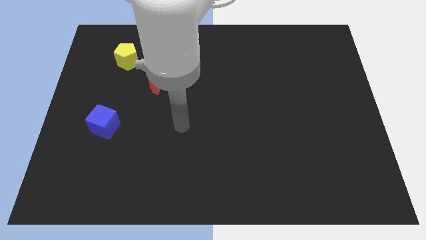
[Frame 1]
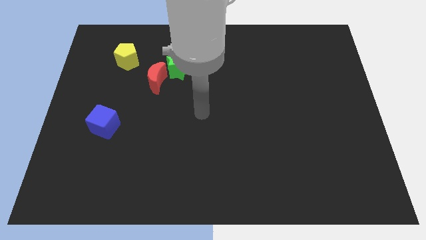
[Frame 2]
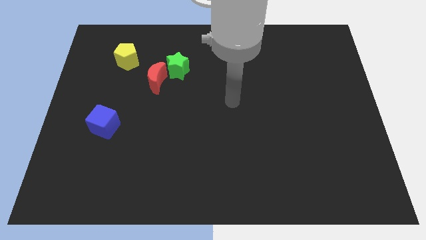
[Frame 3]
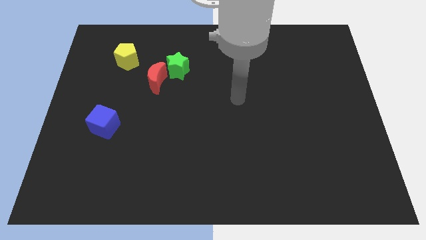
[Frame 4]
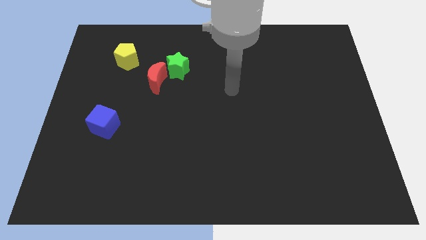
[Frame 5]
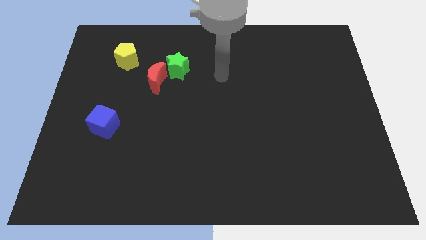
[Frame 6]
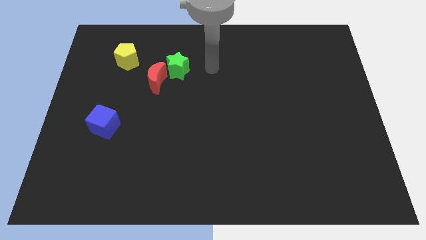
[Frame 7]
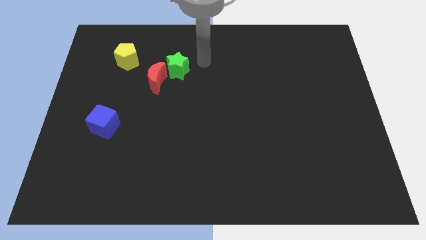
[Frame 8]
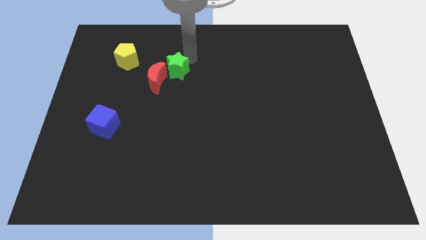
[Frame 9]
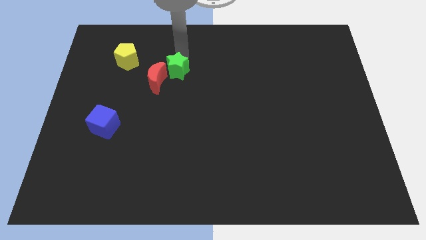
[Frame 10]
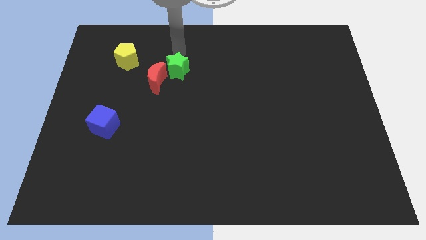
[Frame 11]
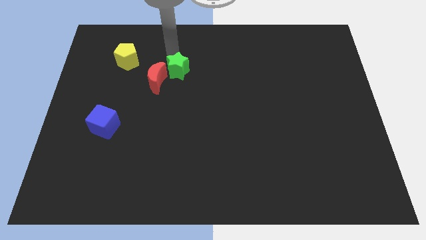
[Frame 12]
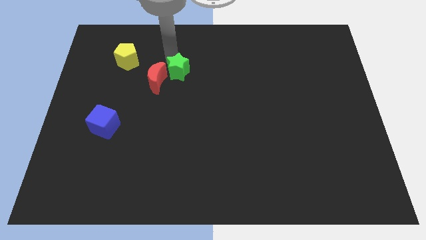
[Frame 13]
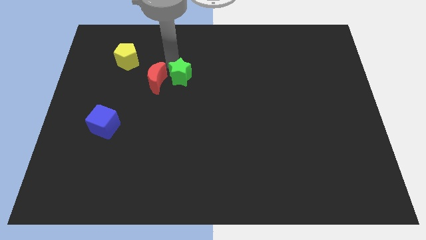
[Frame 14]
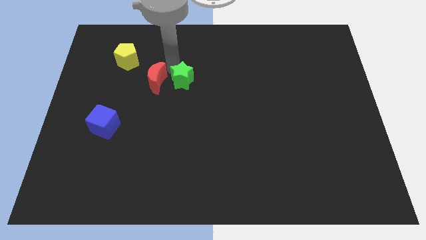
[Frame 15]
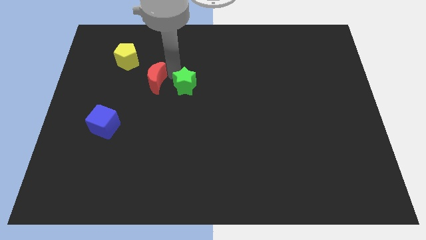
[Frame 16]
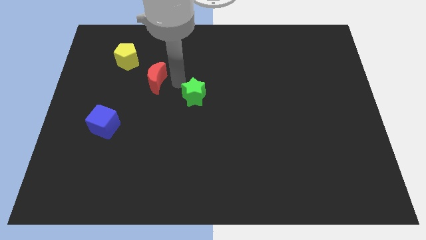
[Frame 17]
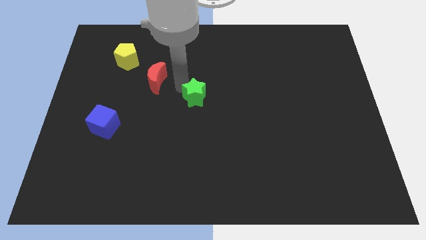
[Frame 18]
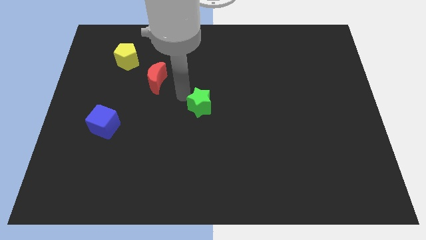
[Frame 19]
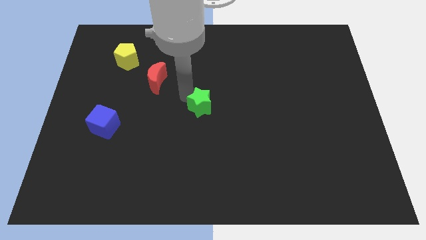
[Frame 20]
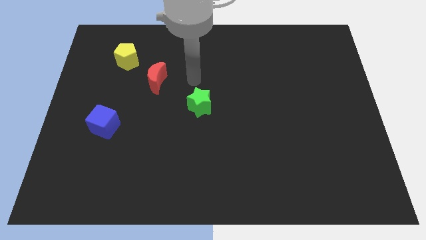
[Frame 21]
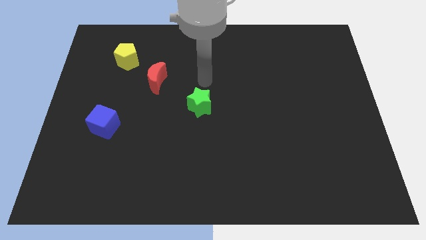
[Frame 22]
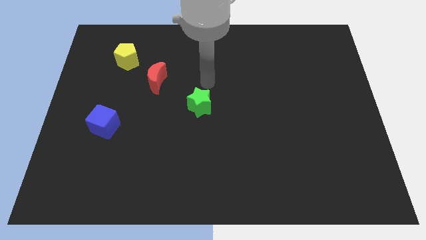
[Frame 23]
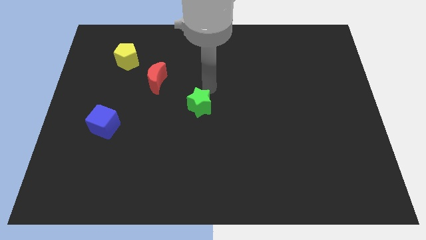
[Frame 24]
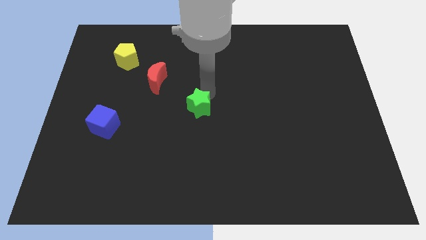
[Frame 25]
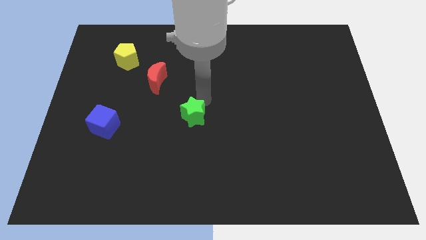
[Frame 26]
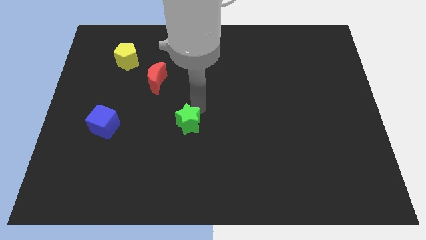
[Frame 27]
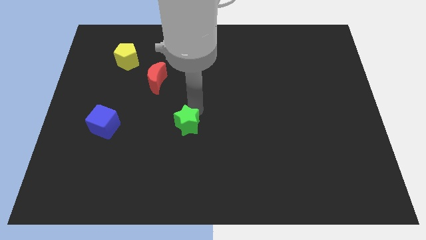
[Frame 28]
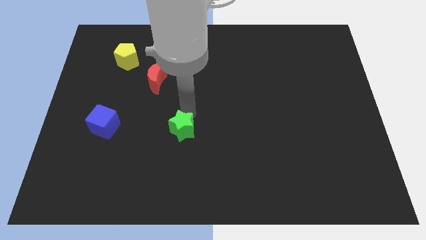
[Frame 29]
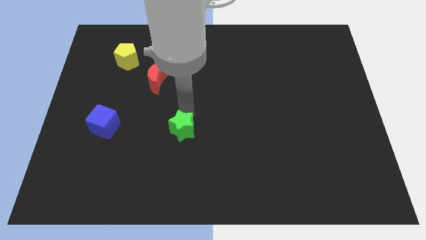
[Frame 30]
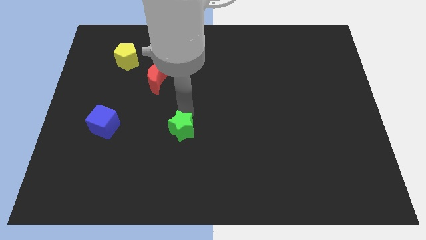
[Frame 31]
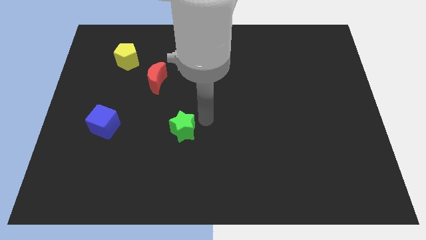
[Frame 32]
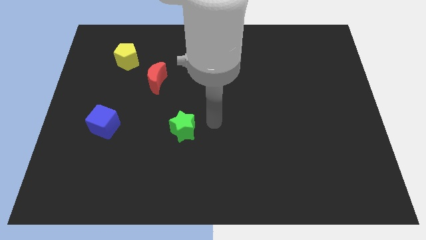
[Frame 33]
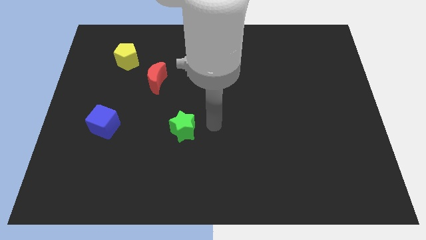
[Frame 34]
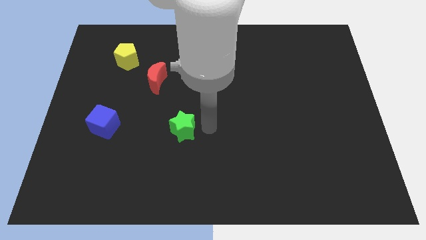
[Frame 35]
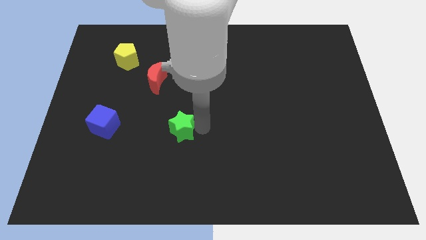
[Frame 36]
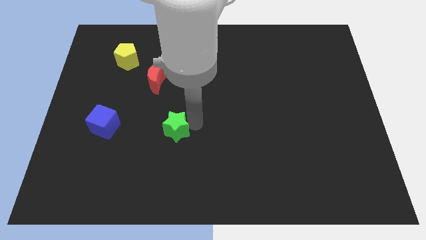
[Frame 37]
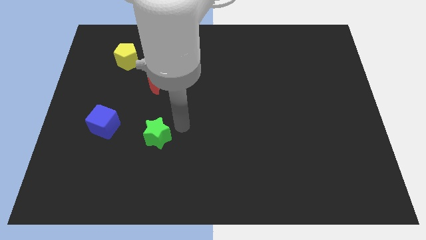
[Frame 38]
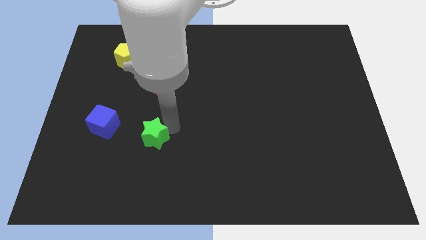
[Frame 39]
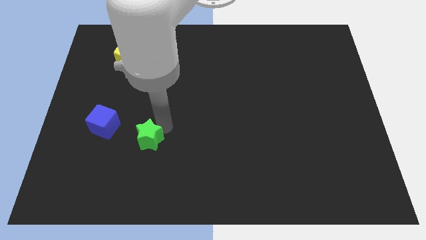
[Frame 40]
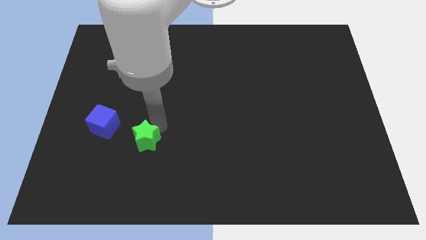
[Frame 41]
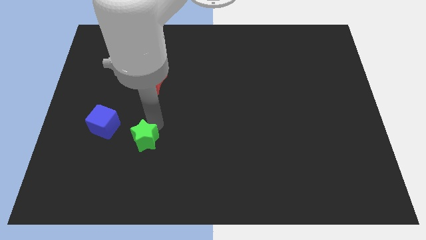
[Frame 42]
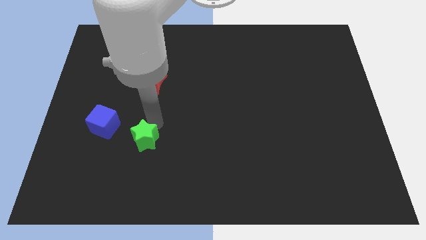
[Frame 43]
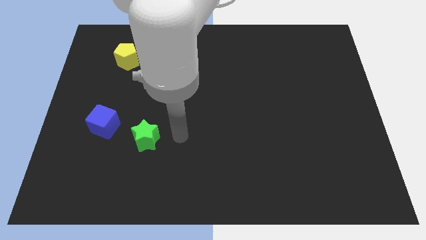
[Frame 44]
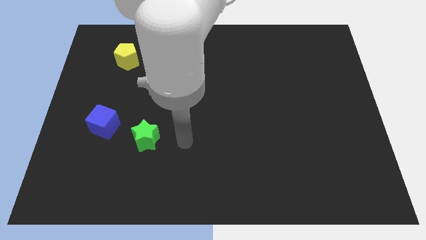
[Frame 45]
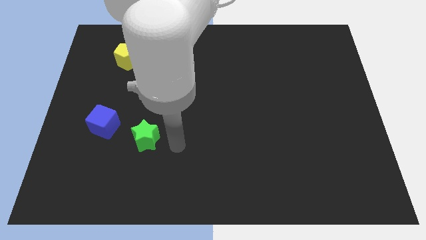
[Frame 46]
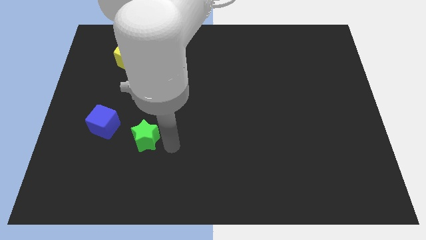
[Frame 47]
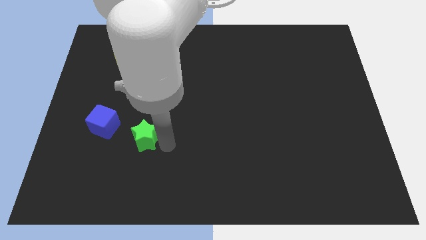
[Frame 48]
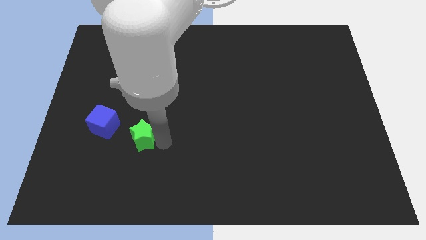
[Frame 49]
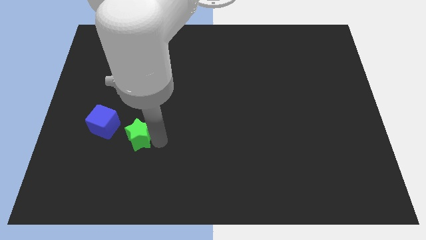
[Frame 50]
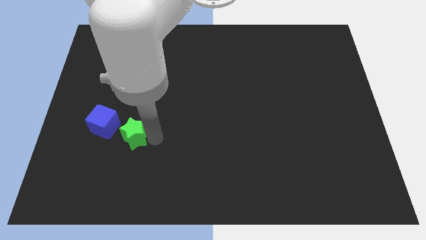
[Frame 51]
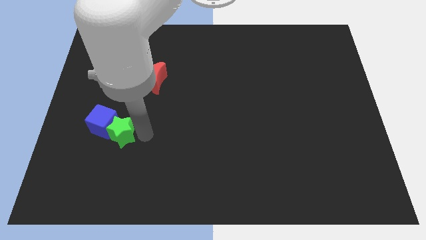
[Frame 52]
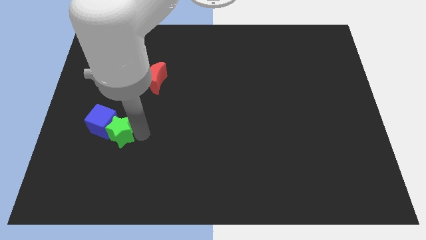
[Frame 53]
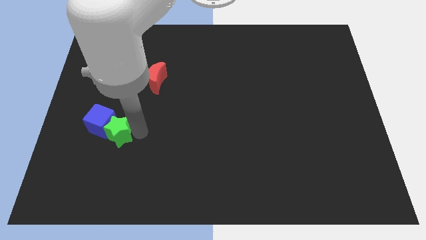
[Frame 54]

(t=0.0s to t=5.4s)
slide the green block close to the blue cube

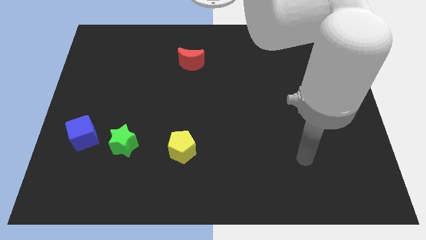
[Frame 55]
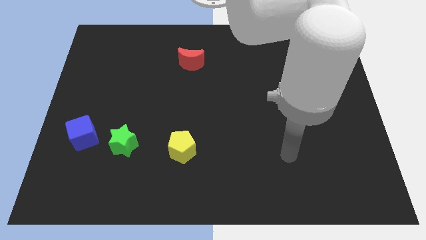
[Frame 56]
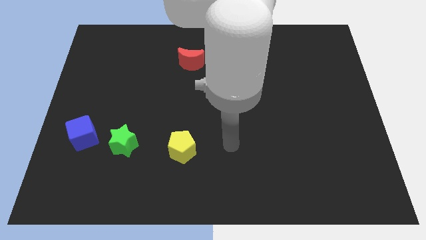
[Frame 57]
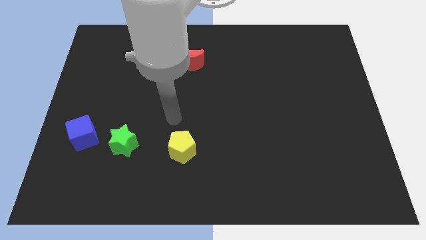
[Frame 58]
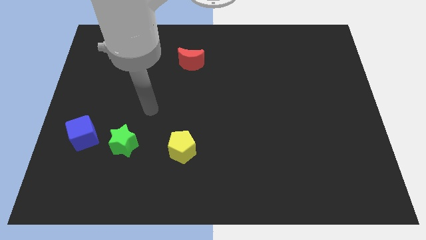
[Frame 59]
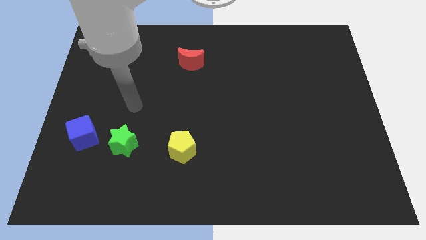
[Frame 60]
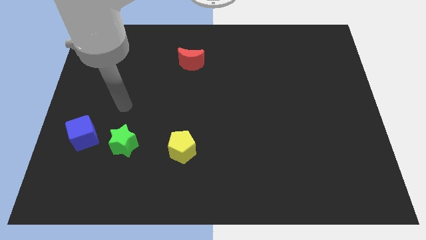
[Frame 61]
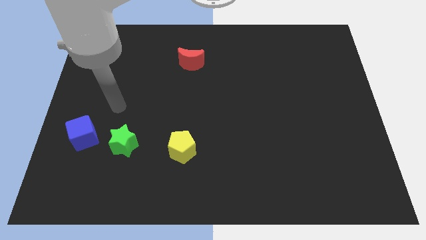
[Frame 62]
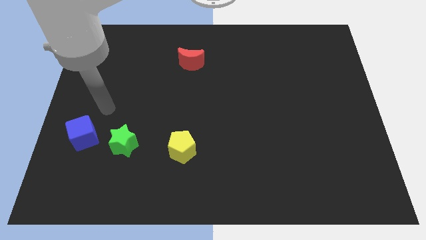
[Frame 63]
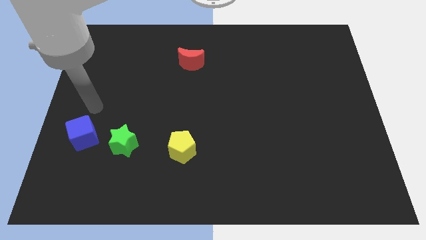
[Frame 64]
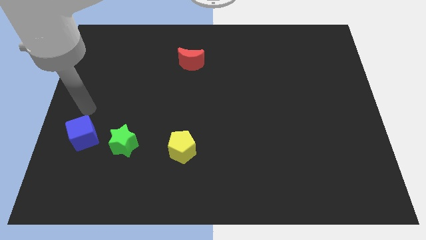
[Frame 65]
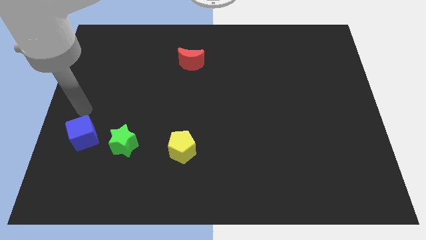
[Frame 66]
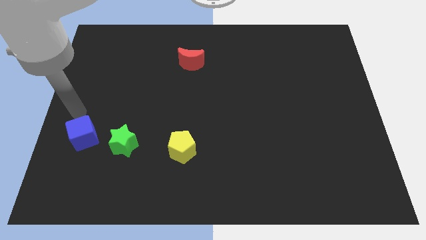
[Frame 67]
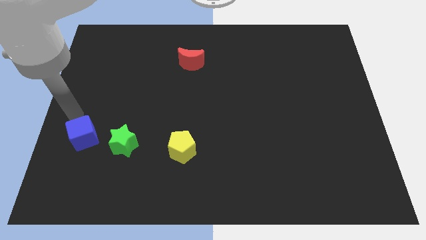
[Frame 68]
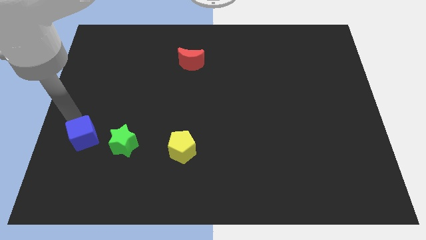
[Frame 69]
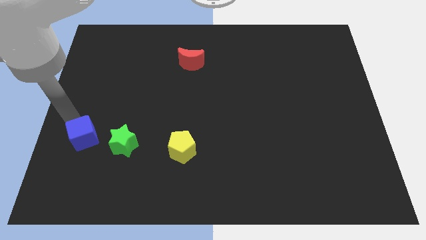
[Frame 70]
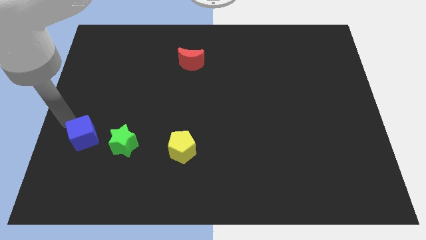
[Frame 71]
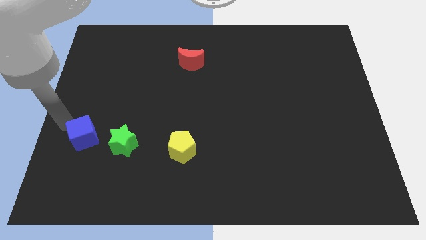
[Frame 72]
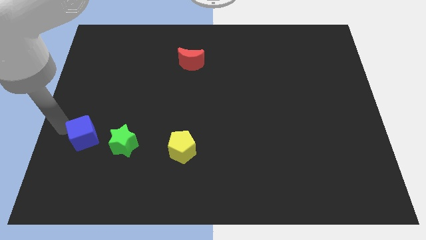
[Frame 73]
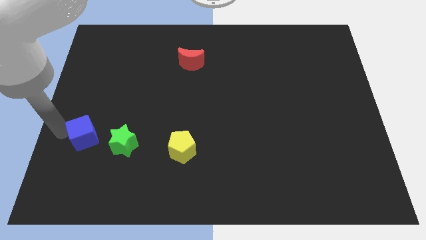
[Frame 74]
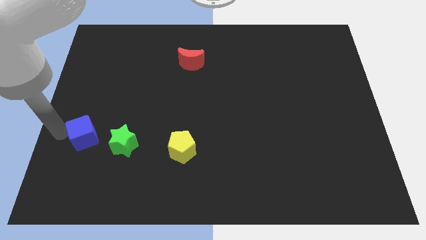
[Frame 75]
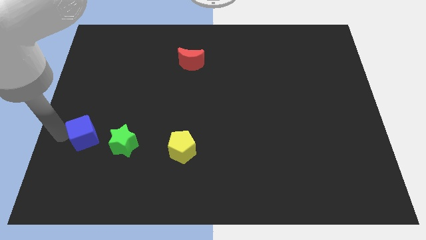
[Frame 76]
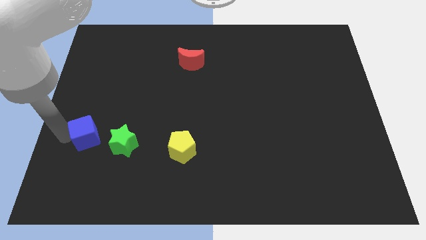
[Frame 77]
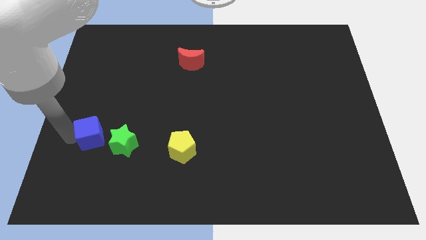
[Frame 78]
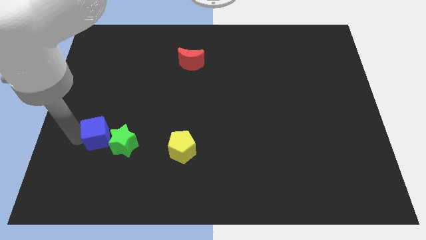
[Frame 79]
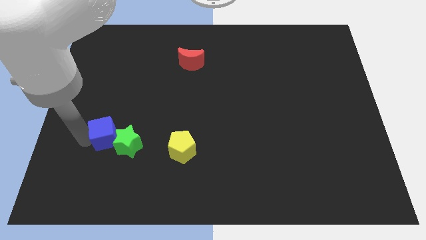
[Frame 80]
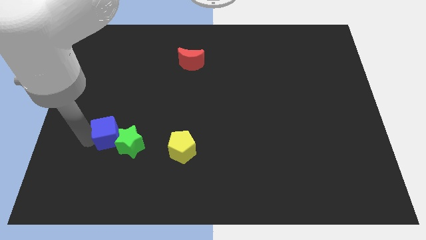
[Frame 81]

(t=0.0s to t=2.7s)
move the cube to the green star

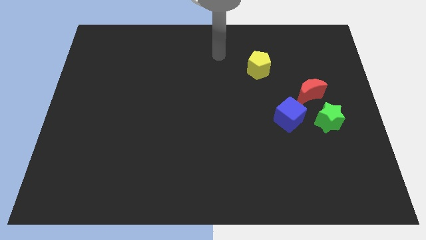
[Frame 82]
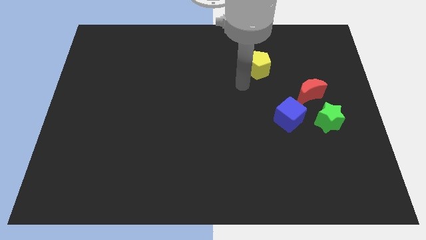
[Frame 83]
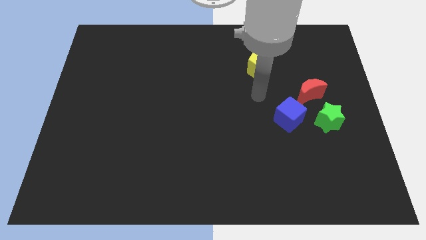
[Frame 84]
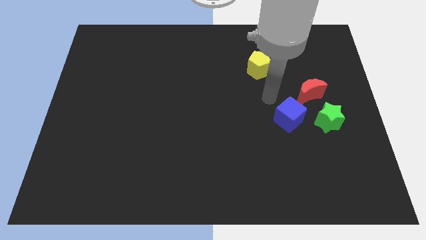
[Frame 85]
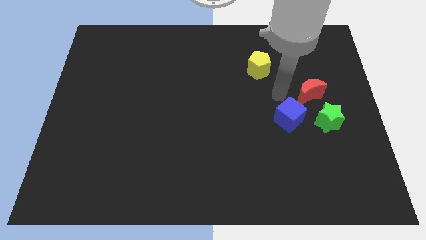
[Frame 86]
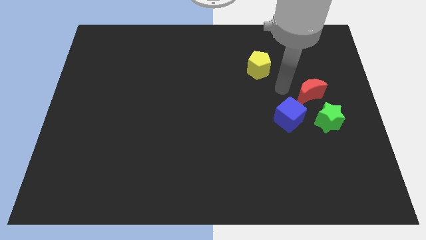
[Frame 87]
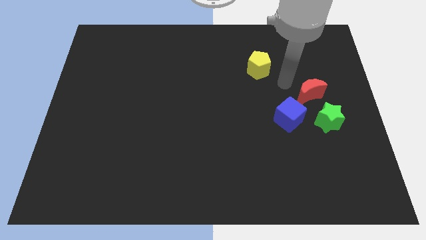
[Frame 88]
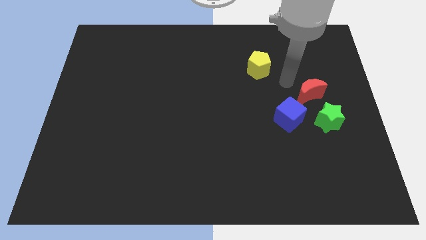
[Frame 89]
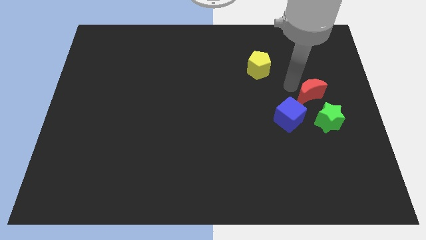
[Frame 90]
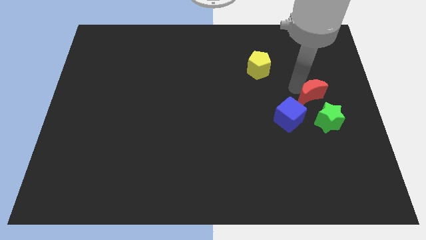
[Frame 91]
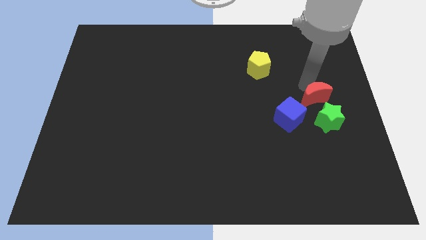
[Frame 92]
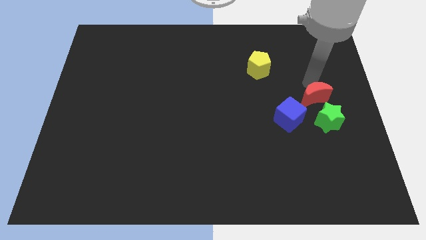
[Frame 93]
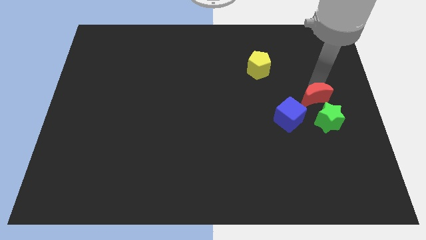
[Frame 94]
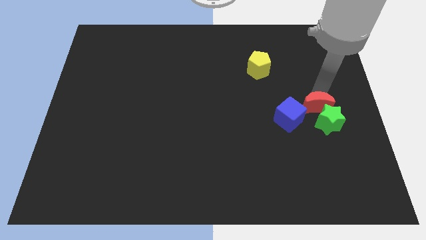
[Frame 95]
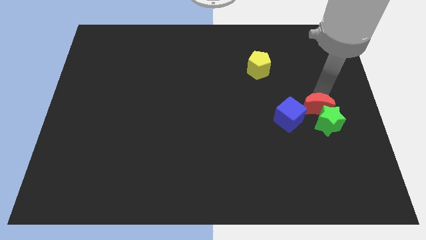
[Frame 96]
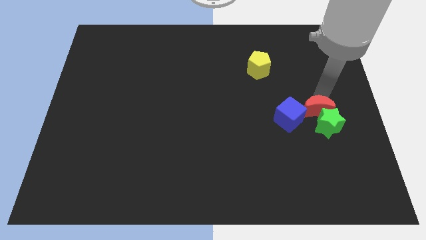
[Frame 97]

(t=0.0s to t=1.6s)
put the red moon towards the green block
